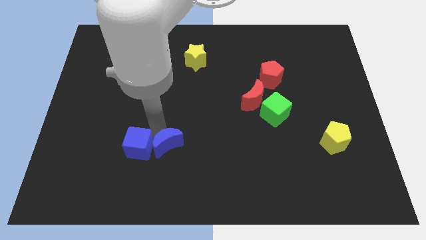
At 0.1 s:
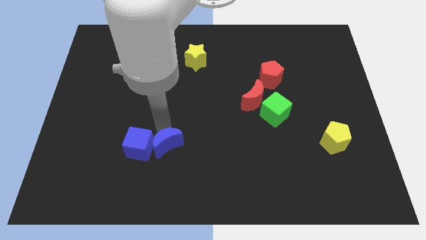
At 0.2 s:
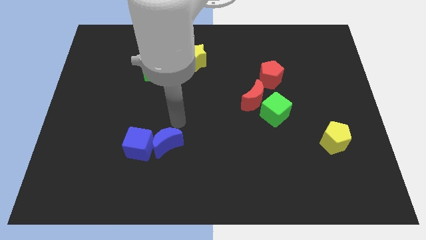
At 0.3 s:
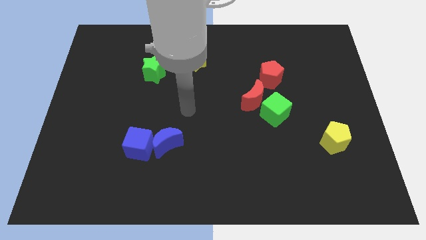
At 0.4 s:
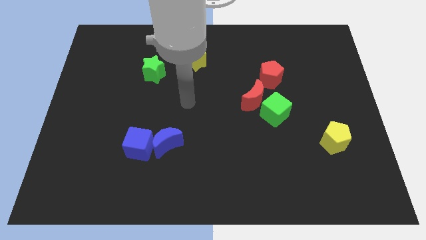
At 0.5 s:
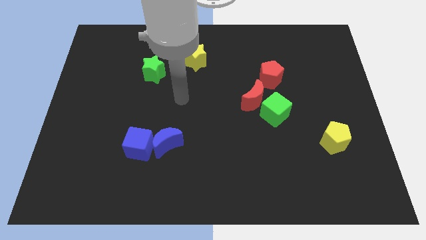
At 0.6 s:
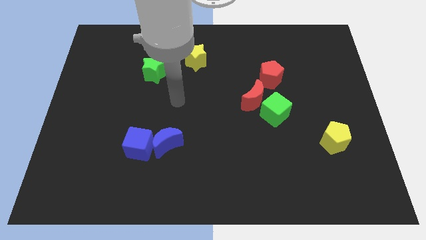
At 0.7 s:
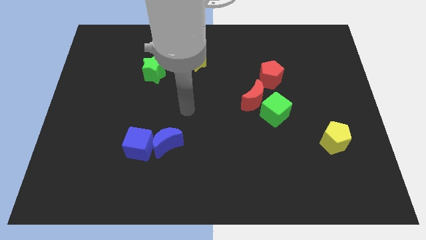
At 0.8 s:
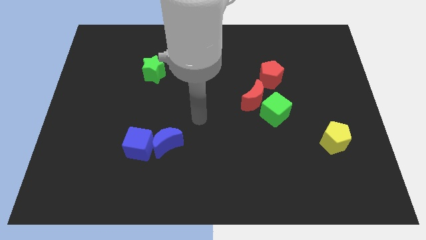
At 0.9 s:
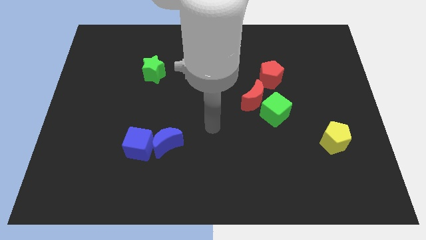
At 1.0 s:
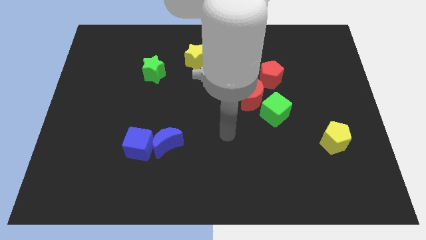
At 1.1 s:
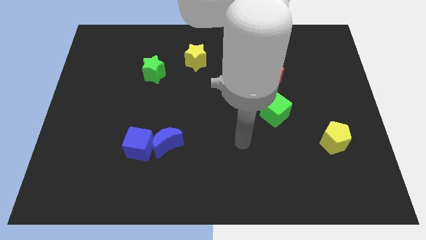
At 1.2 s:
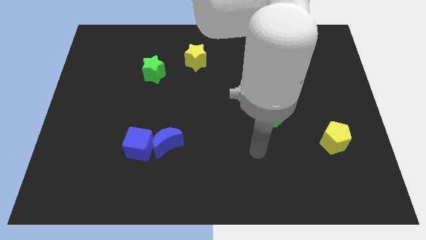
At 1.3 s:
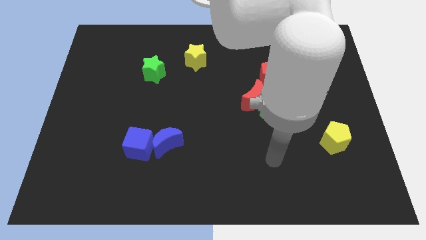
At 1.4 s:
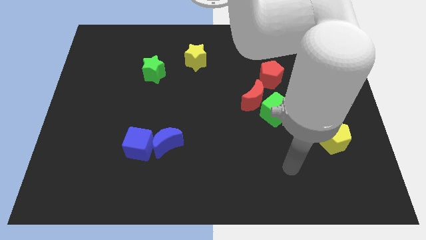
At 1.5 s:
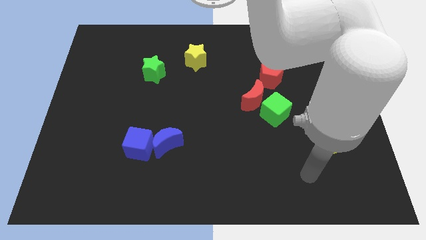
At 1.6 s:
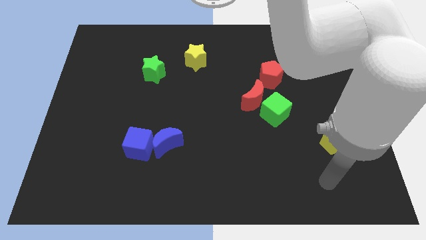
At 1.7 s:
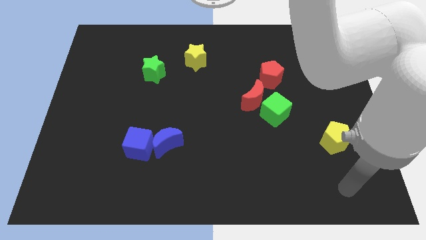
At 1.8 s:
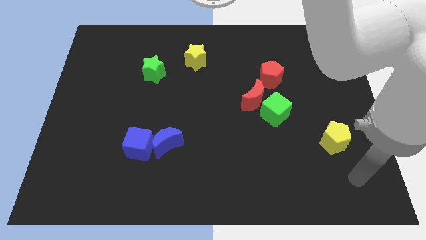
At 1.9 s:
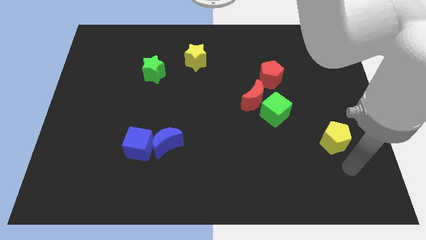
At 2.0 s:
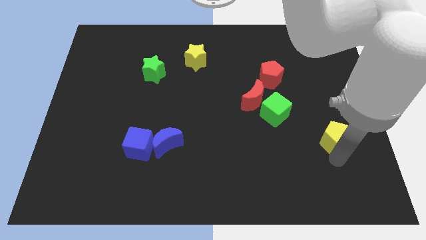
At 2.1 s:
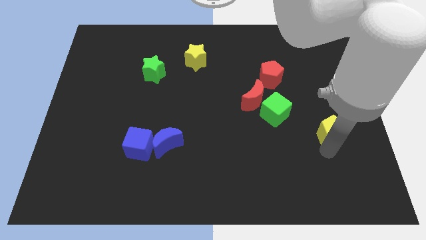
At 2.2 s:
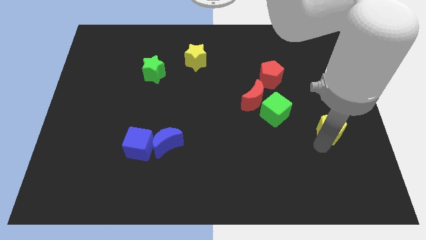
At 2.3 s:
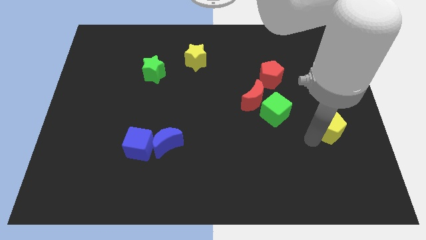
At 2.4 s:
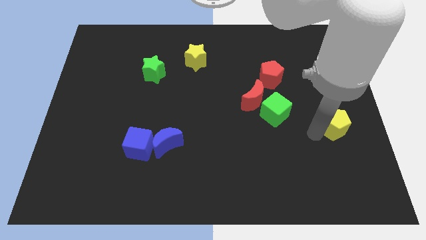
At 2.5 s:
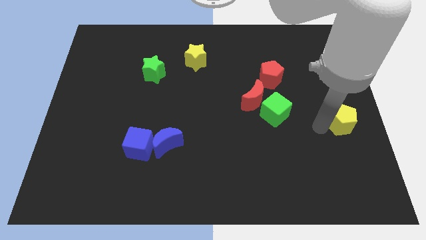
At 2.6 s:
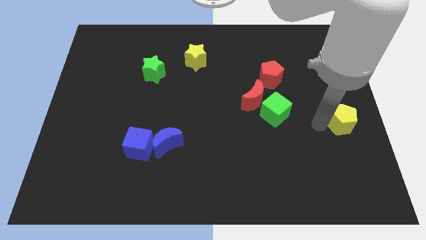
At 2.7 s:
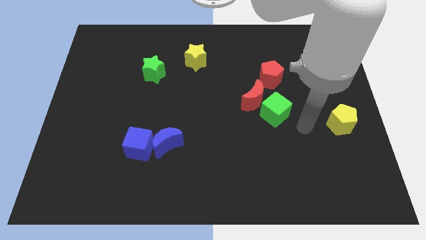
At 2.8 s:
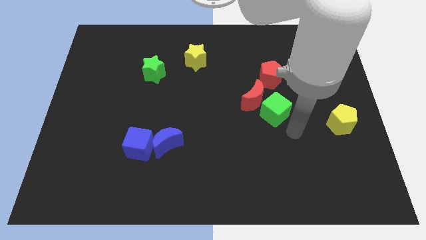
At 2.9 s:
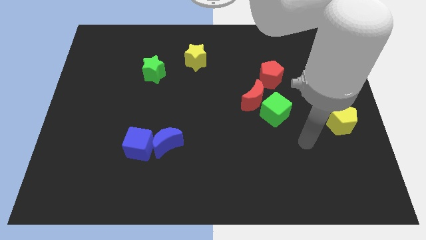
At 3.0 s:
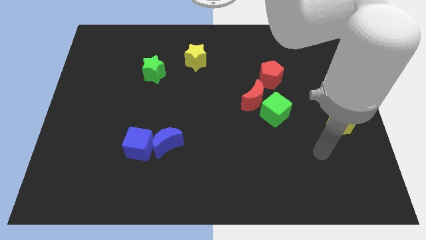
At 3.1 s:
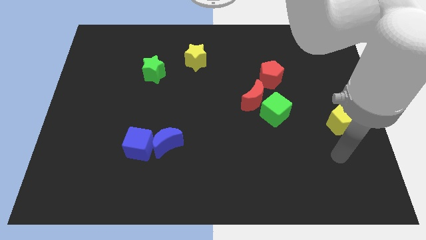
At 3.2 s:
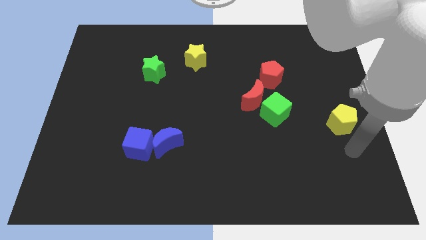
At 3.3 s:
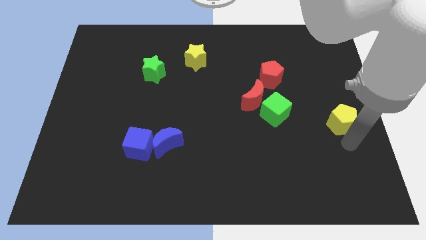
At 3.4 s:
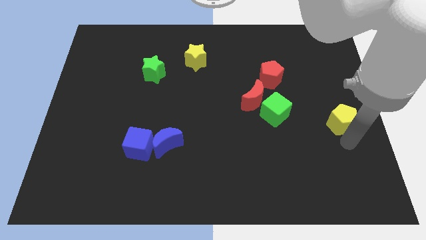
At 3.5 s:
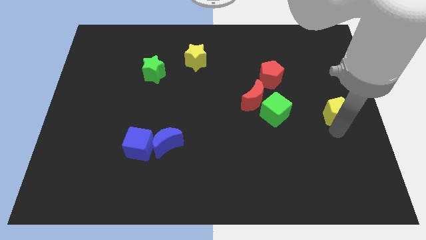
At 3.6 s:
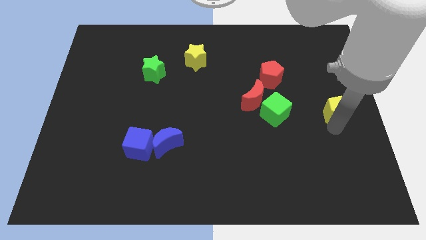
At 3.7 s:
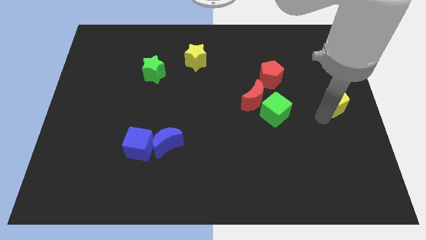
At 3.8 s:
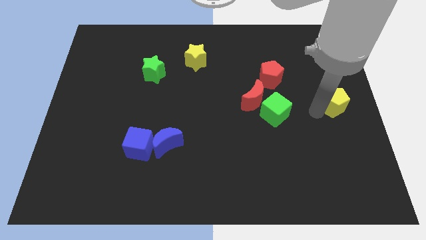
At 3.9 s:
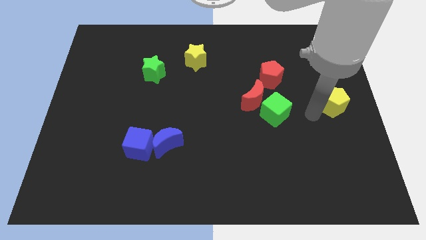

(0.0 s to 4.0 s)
place the yellow pentagon to the right of the green cube

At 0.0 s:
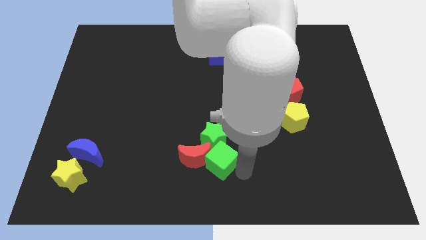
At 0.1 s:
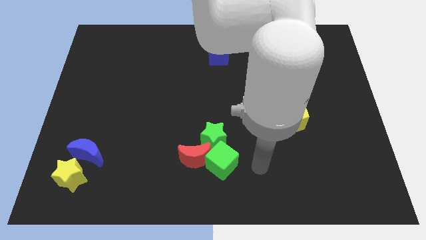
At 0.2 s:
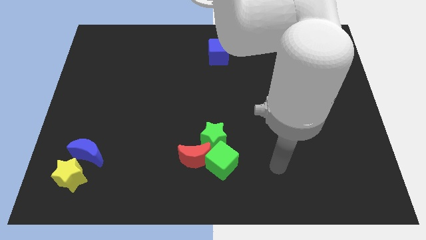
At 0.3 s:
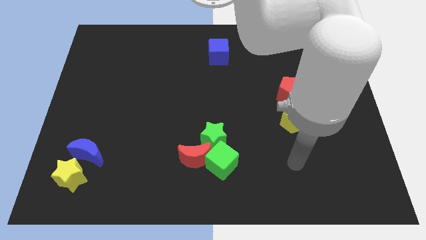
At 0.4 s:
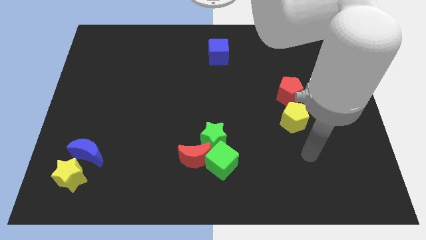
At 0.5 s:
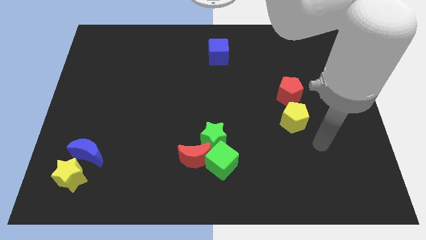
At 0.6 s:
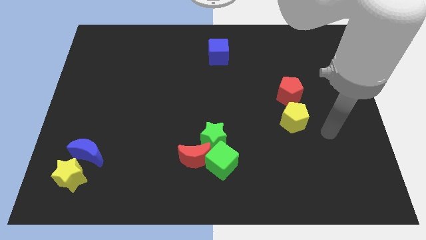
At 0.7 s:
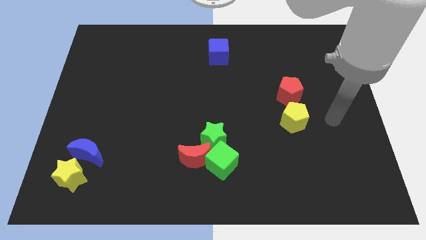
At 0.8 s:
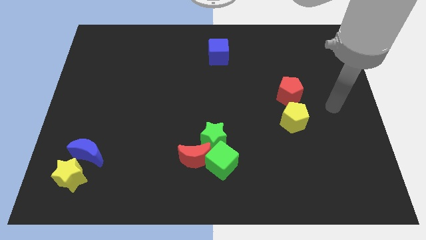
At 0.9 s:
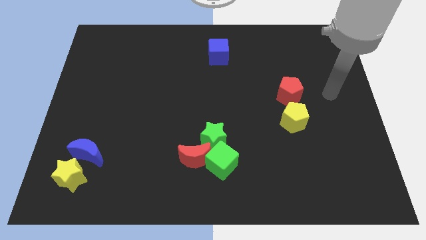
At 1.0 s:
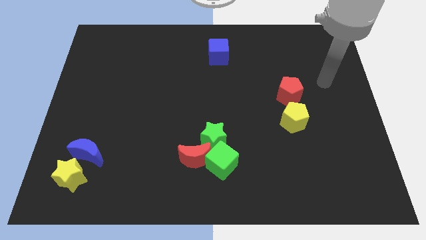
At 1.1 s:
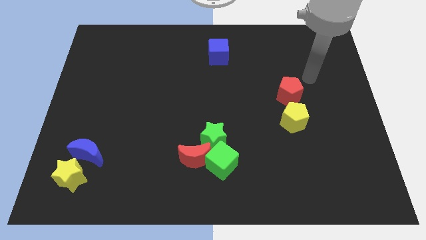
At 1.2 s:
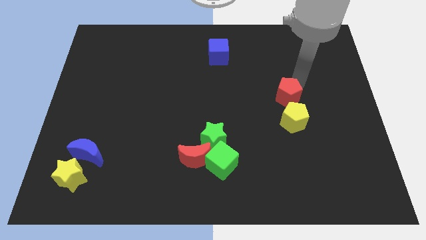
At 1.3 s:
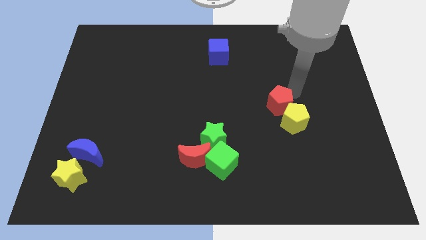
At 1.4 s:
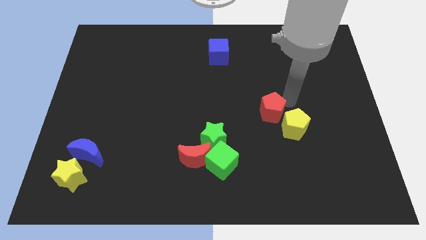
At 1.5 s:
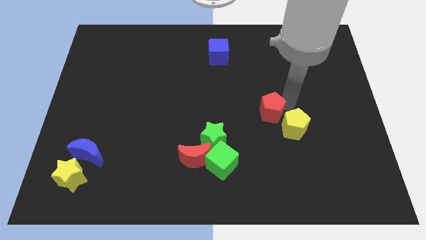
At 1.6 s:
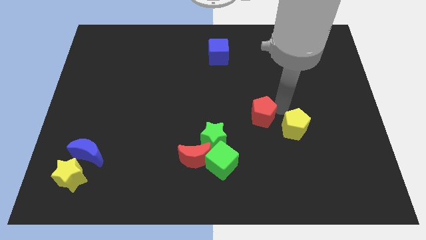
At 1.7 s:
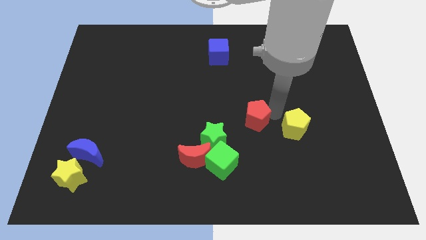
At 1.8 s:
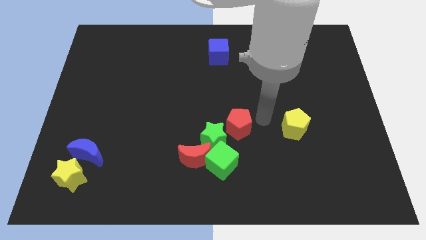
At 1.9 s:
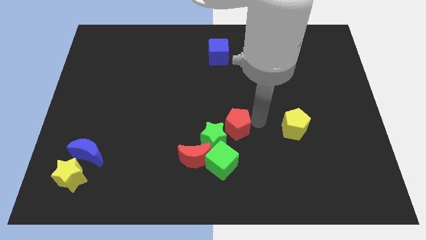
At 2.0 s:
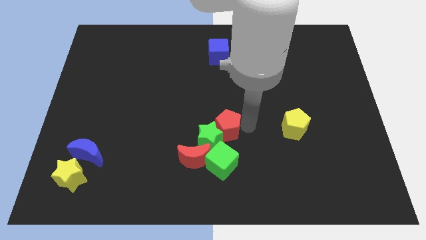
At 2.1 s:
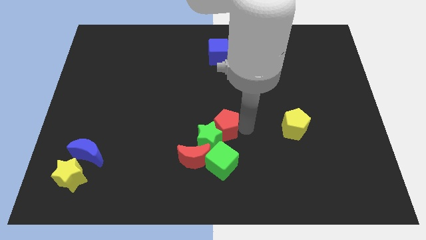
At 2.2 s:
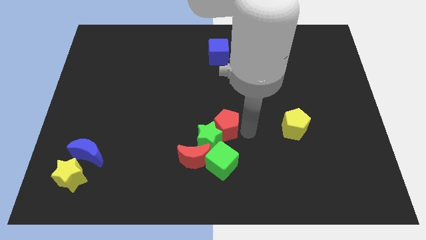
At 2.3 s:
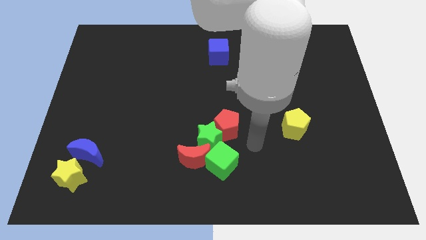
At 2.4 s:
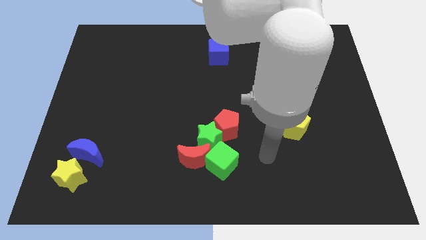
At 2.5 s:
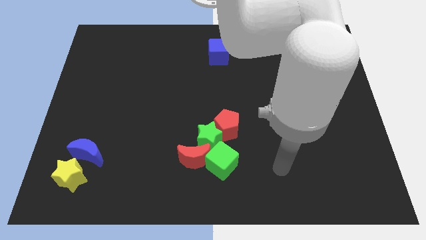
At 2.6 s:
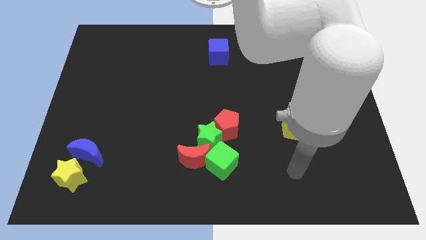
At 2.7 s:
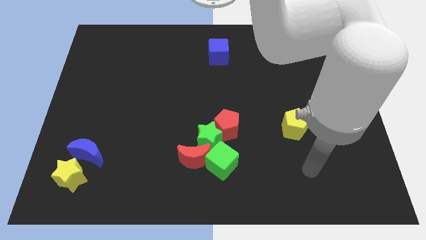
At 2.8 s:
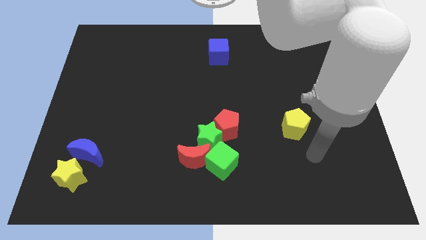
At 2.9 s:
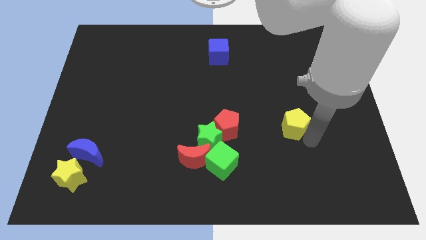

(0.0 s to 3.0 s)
move the red pentagon into the green star

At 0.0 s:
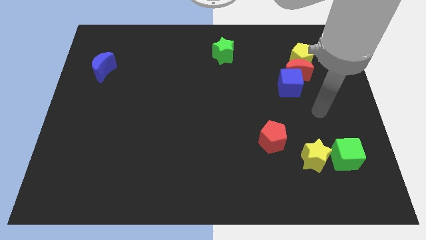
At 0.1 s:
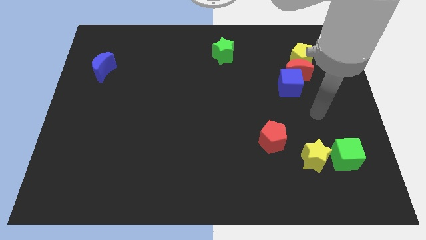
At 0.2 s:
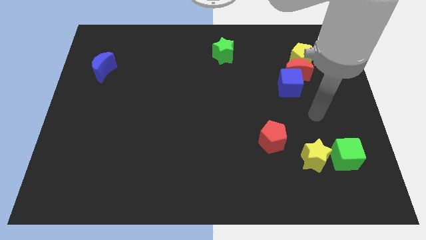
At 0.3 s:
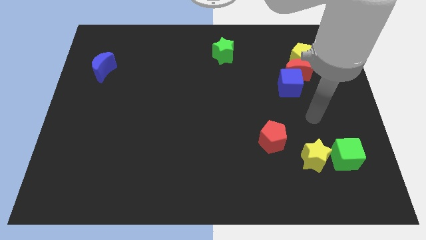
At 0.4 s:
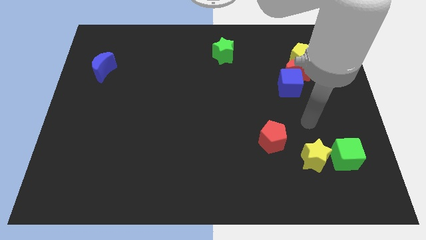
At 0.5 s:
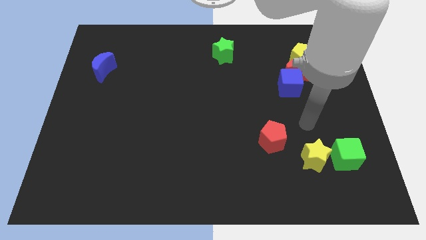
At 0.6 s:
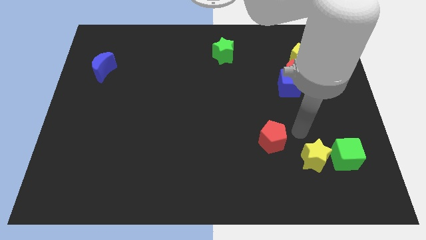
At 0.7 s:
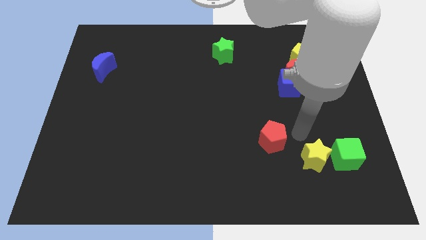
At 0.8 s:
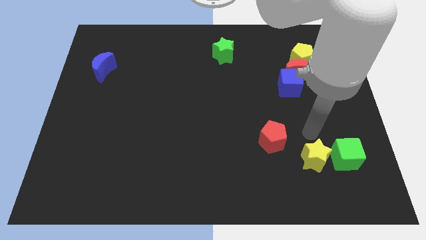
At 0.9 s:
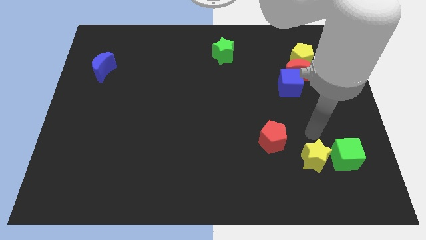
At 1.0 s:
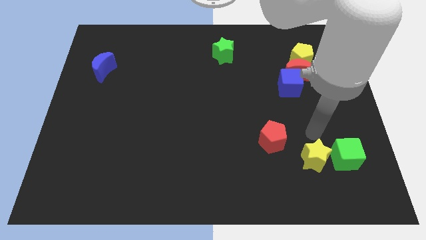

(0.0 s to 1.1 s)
place your arm at the top of yellow star

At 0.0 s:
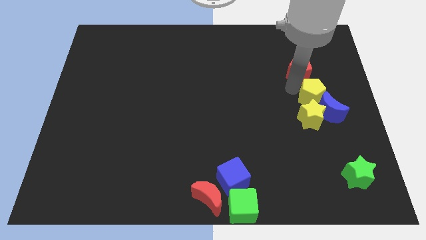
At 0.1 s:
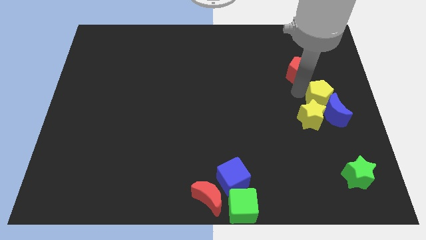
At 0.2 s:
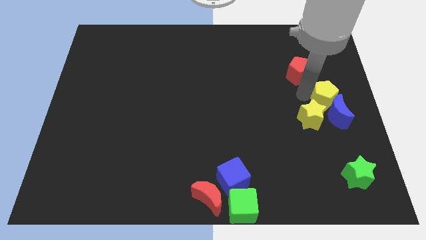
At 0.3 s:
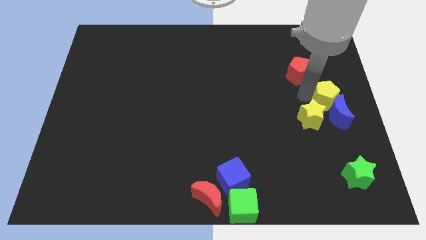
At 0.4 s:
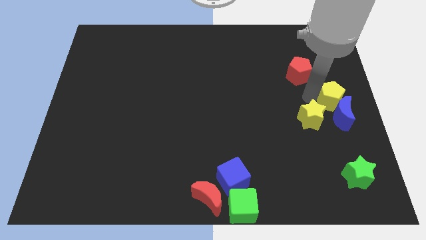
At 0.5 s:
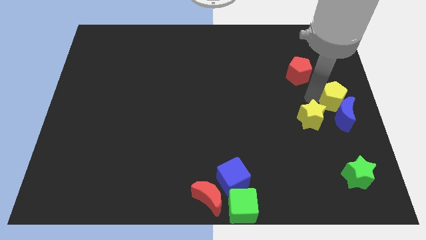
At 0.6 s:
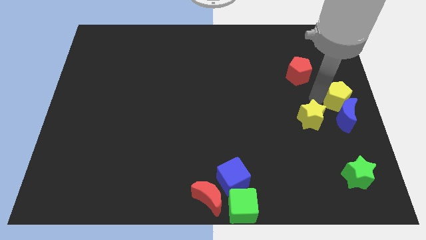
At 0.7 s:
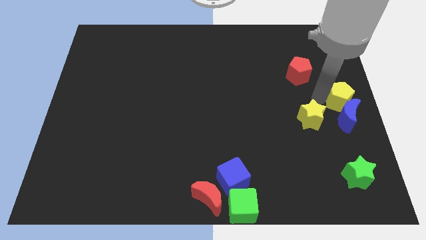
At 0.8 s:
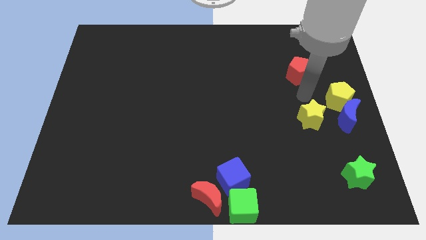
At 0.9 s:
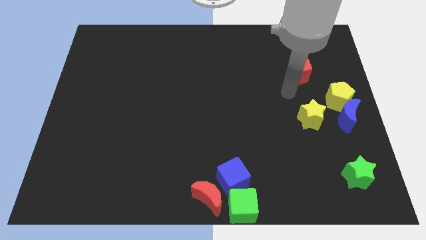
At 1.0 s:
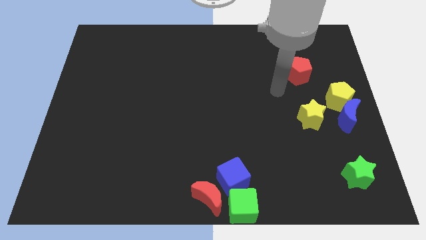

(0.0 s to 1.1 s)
move the yellow pentagon into the left side of the blue crescent
